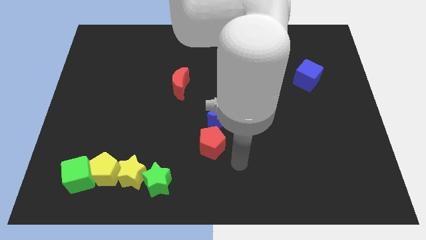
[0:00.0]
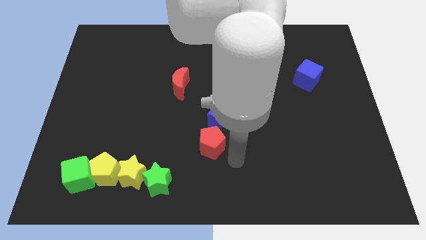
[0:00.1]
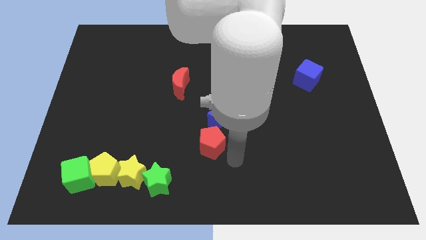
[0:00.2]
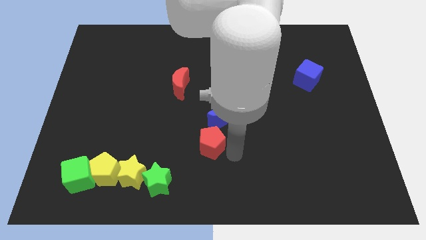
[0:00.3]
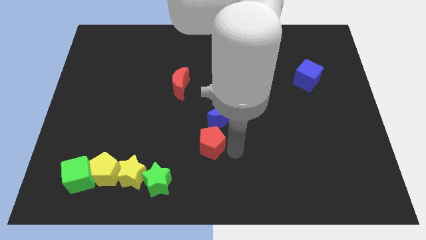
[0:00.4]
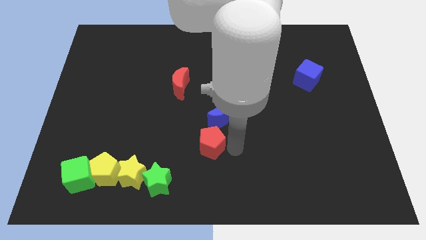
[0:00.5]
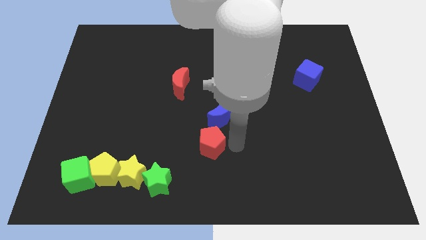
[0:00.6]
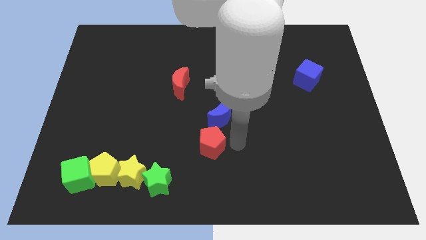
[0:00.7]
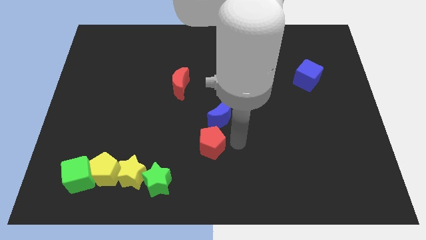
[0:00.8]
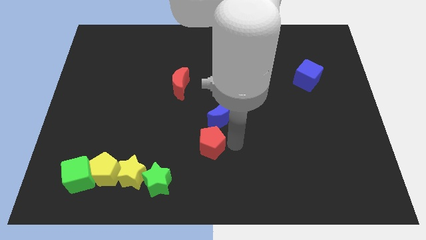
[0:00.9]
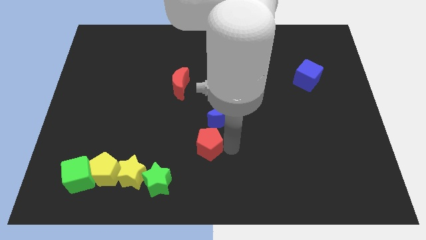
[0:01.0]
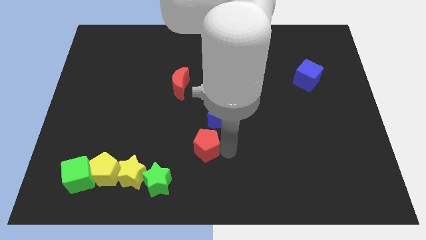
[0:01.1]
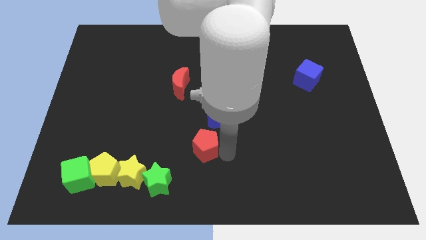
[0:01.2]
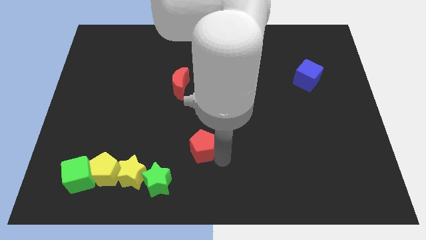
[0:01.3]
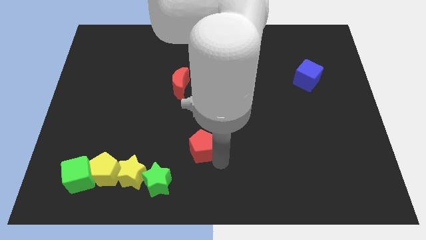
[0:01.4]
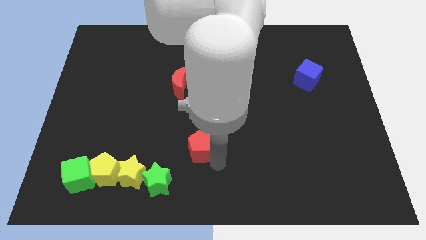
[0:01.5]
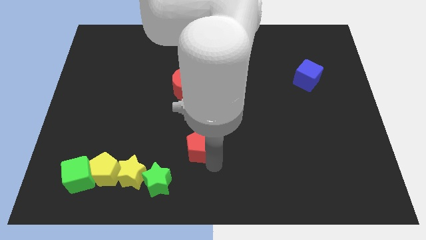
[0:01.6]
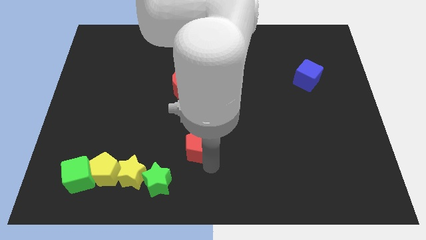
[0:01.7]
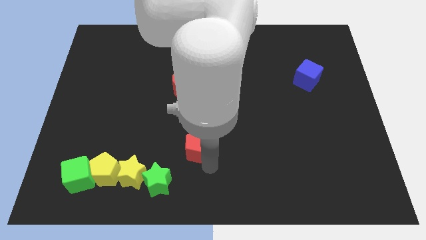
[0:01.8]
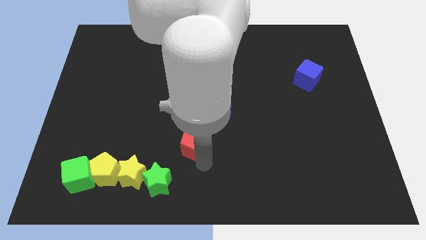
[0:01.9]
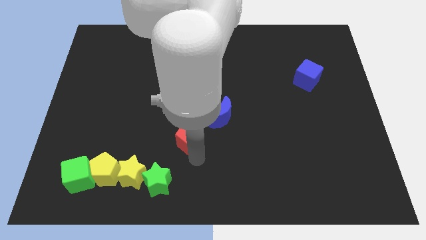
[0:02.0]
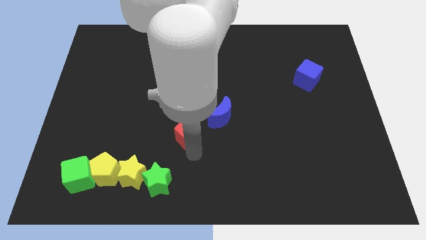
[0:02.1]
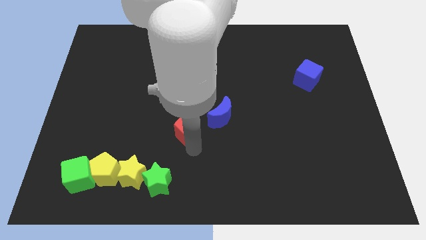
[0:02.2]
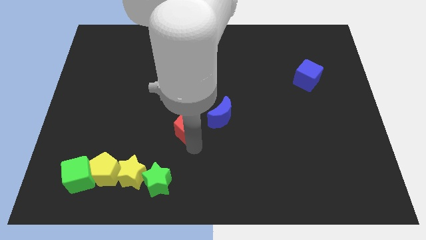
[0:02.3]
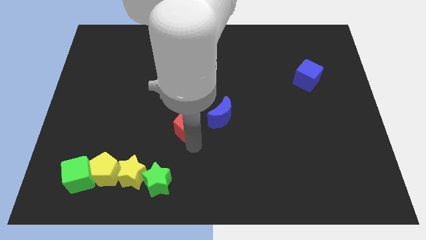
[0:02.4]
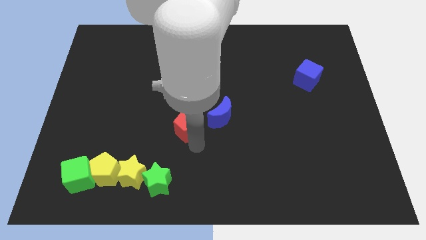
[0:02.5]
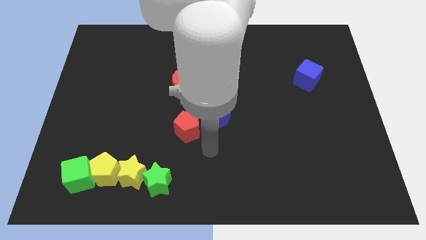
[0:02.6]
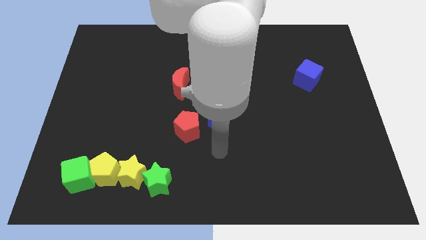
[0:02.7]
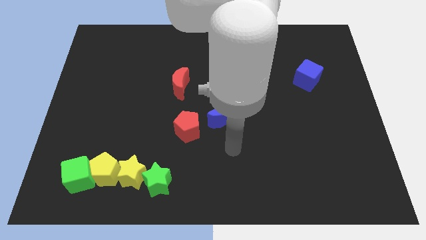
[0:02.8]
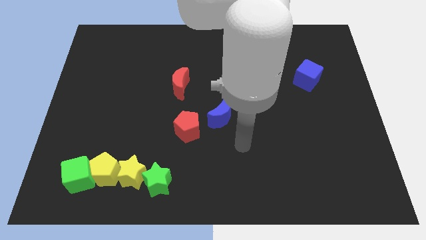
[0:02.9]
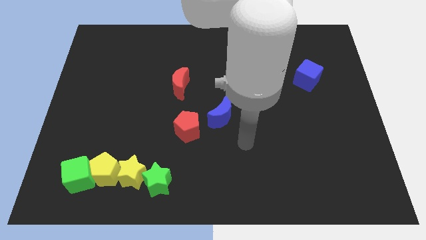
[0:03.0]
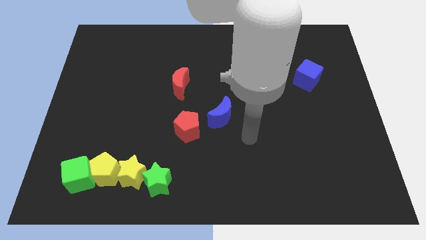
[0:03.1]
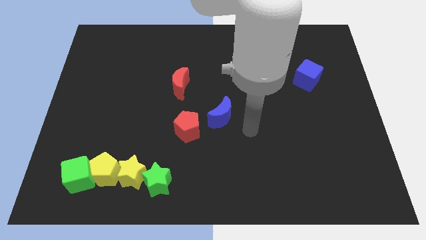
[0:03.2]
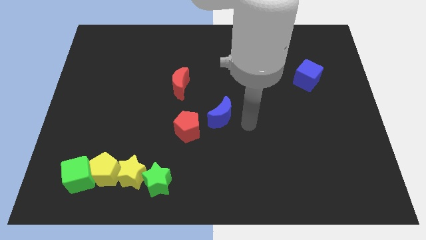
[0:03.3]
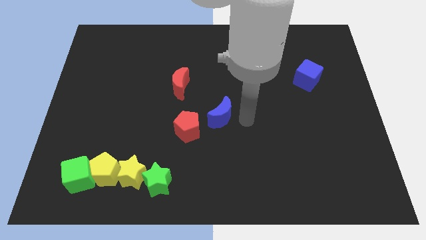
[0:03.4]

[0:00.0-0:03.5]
put the red pentagon diagonally top right to the green star

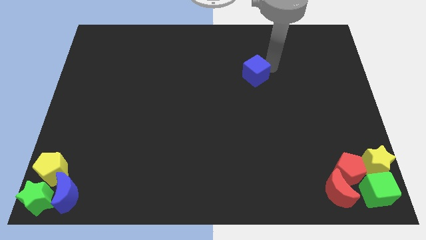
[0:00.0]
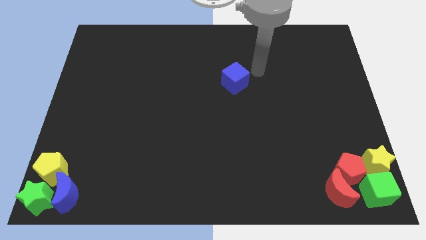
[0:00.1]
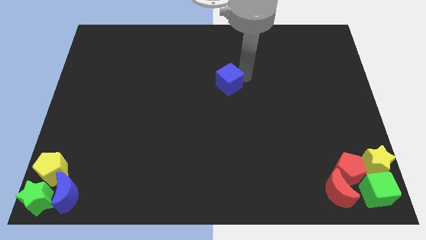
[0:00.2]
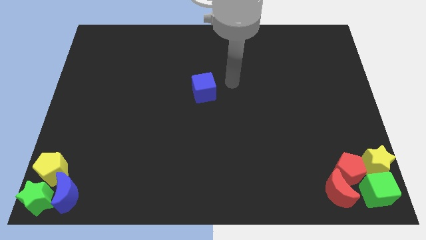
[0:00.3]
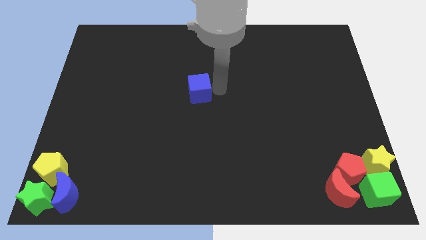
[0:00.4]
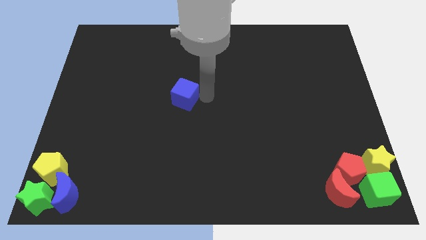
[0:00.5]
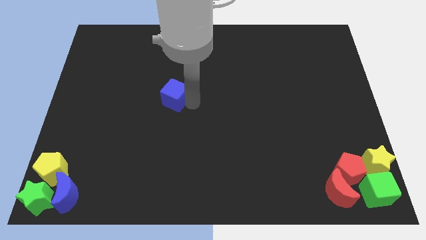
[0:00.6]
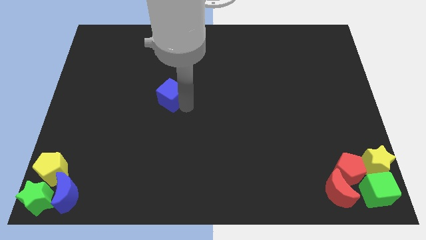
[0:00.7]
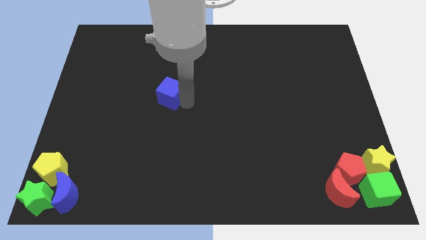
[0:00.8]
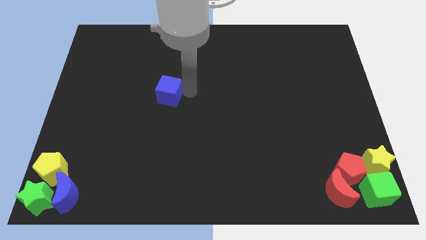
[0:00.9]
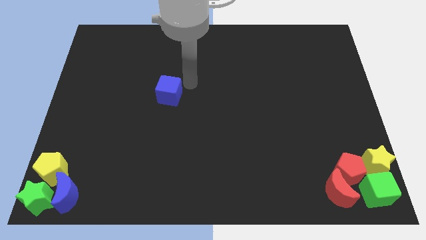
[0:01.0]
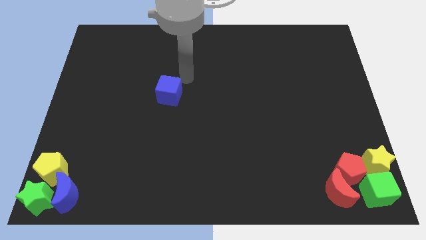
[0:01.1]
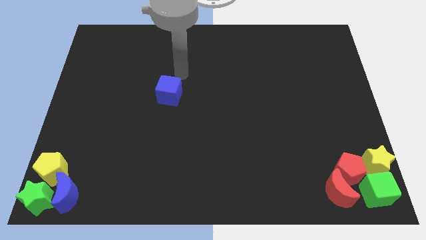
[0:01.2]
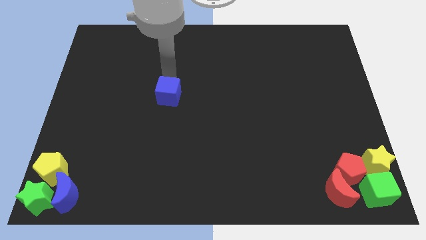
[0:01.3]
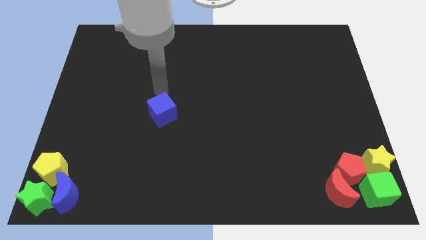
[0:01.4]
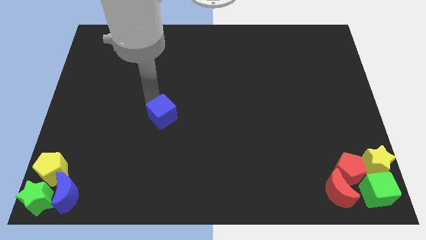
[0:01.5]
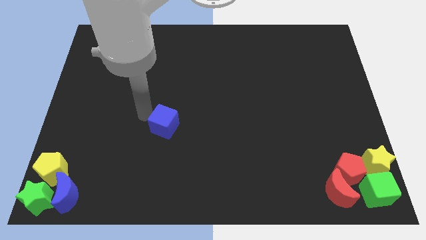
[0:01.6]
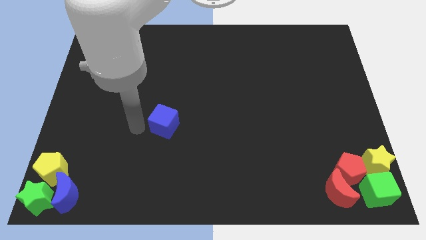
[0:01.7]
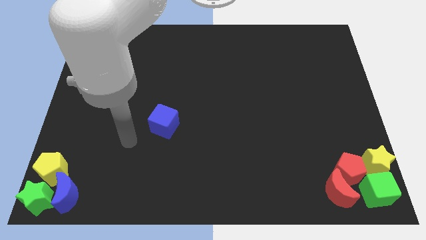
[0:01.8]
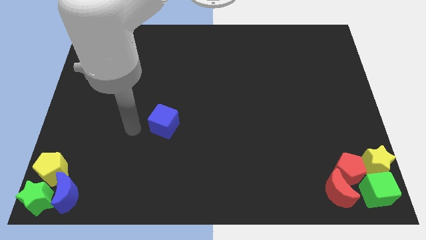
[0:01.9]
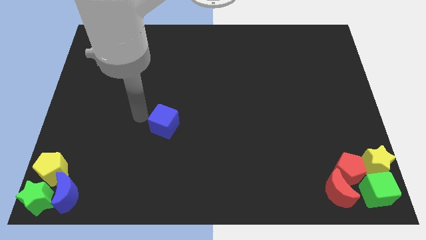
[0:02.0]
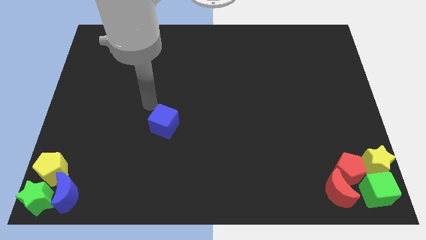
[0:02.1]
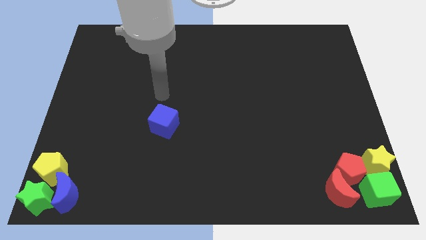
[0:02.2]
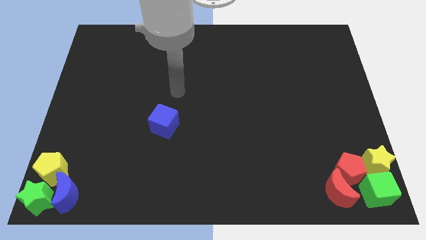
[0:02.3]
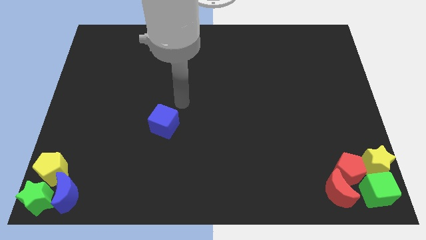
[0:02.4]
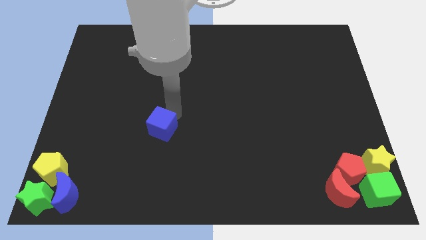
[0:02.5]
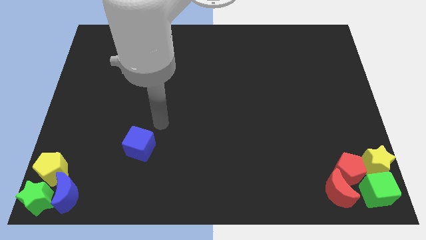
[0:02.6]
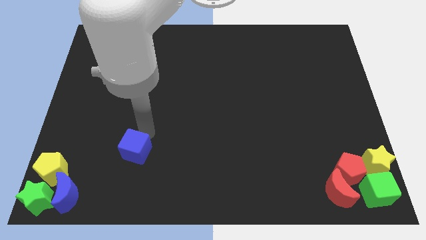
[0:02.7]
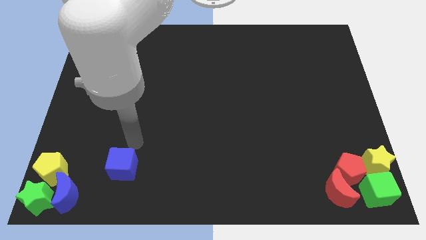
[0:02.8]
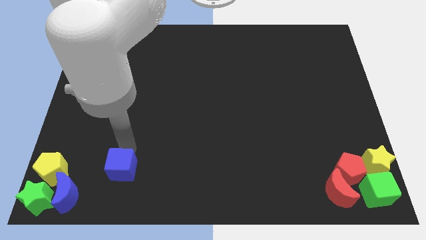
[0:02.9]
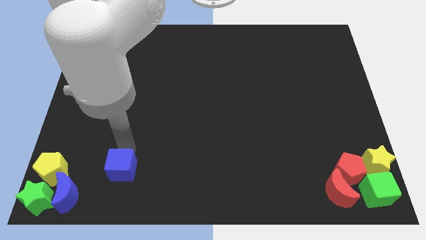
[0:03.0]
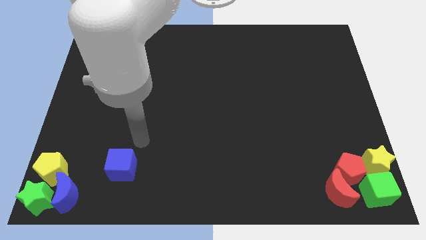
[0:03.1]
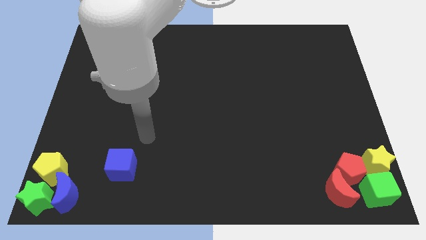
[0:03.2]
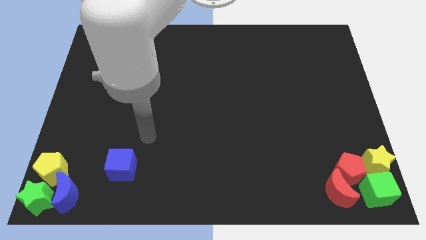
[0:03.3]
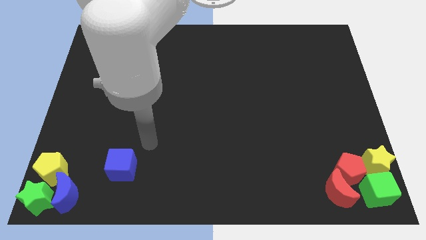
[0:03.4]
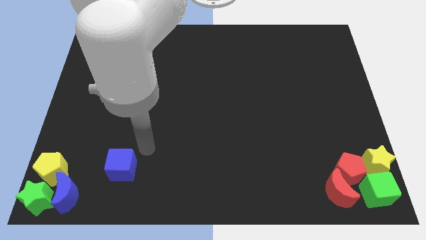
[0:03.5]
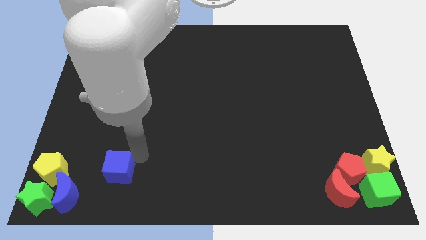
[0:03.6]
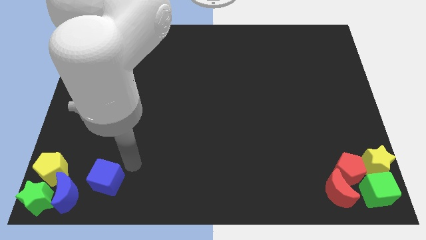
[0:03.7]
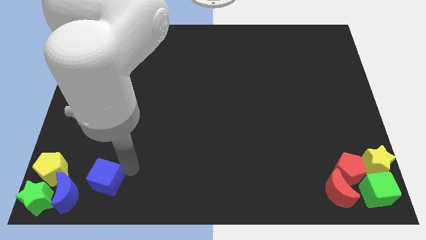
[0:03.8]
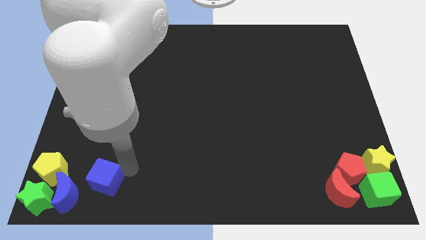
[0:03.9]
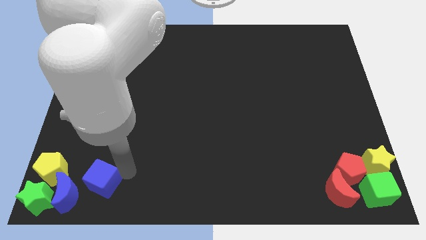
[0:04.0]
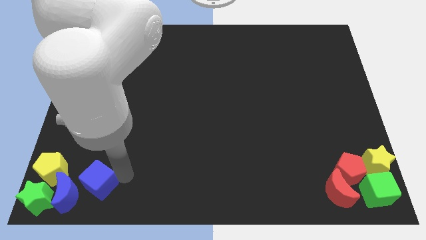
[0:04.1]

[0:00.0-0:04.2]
move the blue cube to the right side of the blue moon

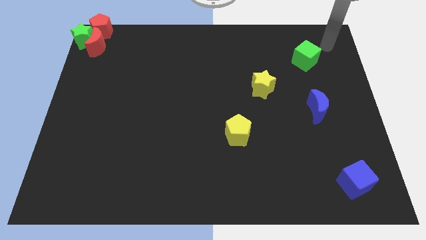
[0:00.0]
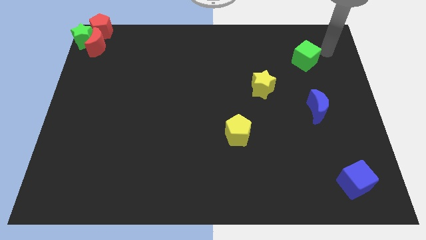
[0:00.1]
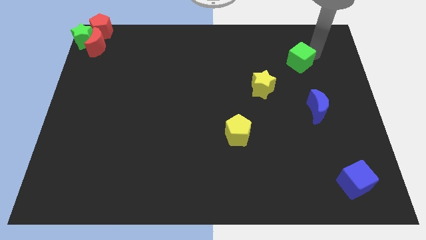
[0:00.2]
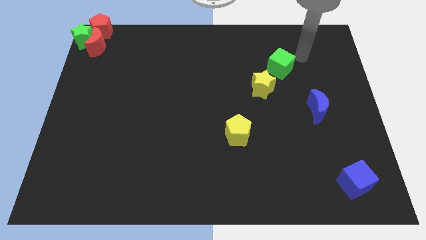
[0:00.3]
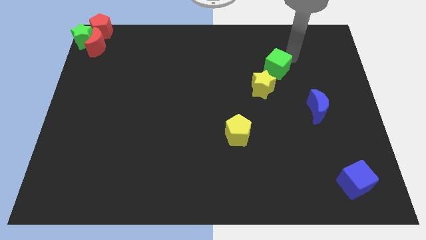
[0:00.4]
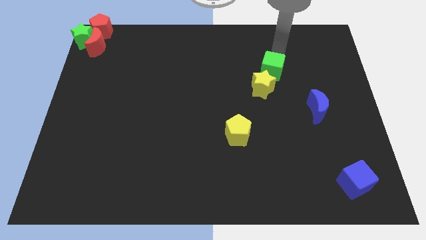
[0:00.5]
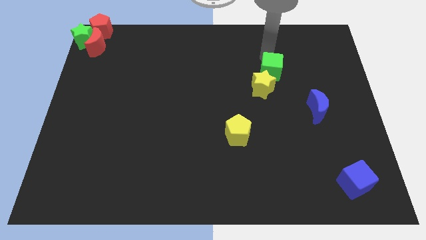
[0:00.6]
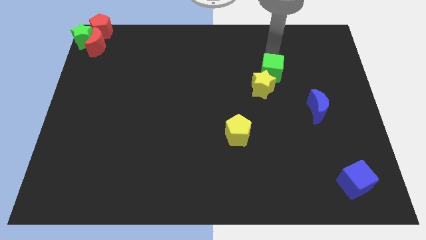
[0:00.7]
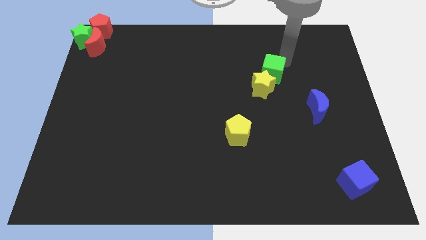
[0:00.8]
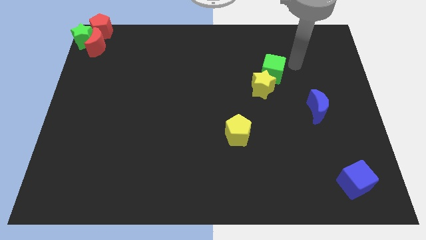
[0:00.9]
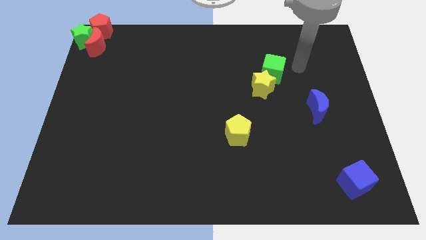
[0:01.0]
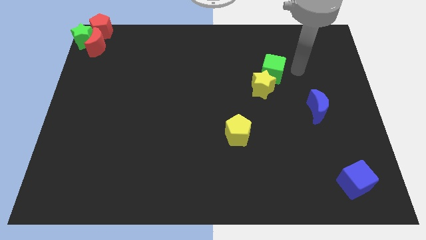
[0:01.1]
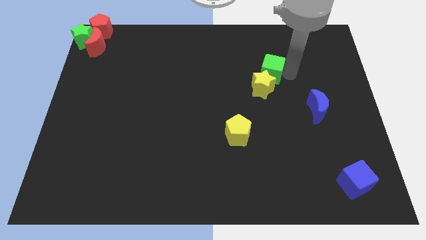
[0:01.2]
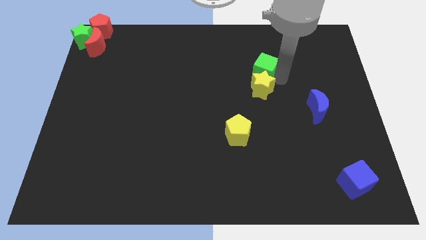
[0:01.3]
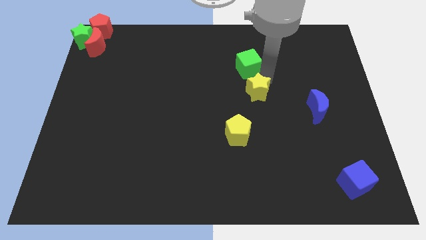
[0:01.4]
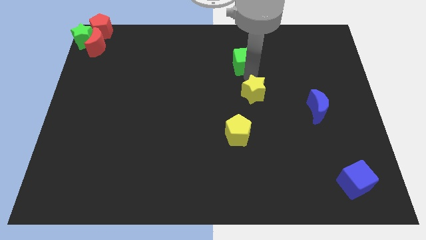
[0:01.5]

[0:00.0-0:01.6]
place the green cube on top of the yellow star
